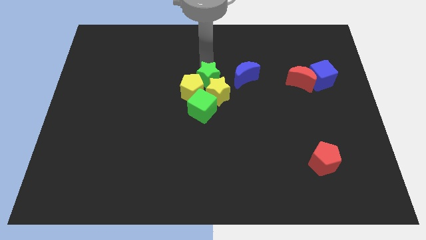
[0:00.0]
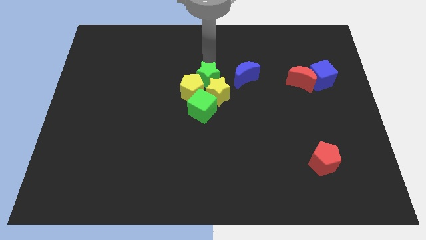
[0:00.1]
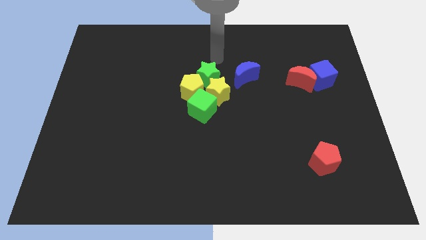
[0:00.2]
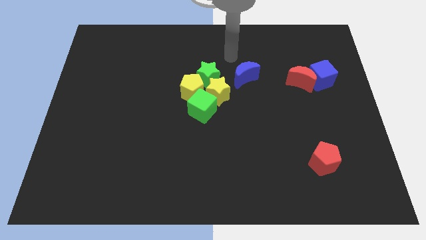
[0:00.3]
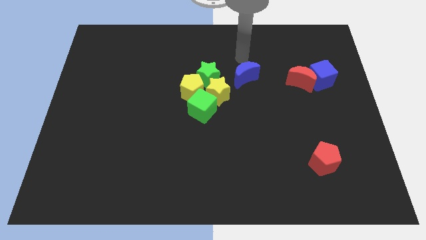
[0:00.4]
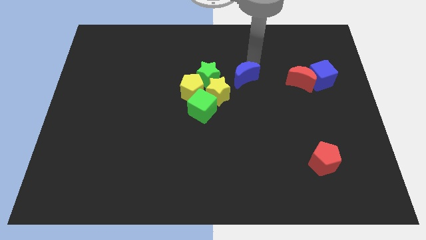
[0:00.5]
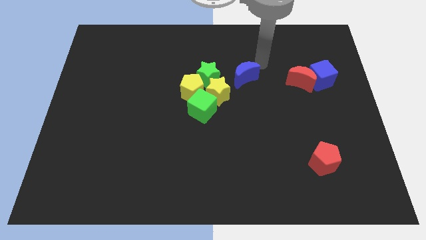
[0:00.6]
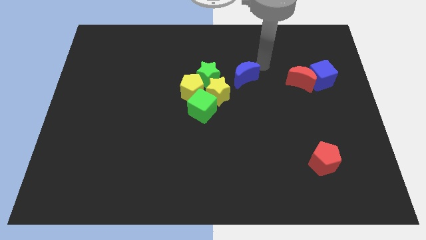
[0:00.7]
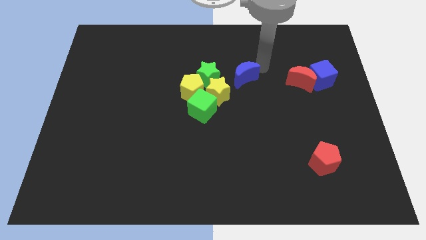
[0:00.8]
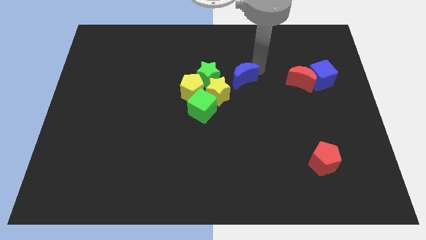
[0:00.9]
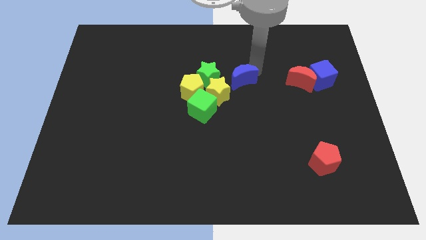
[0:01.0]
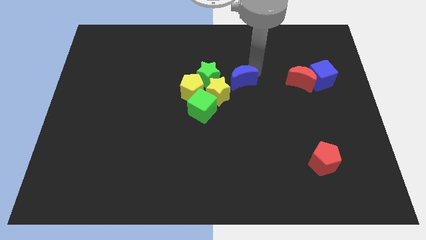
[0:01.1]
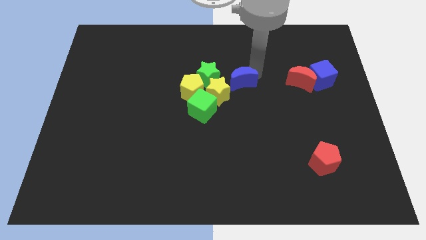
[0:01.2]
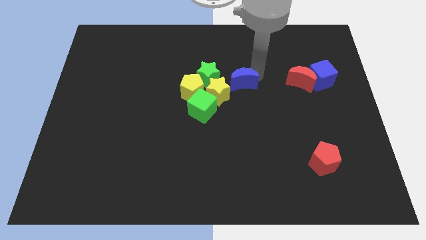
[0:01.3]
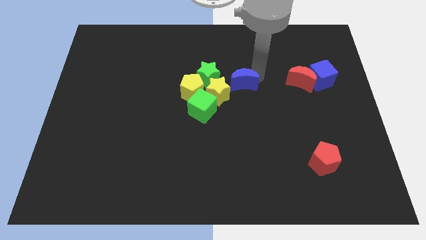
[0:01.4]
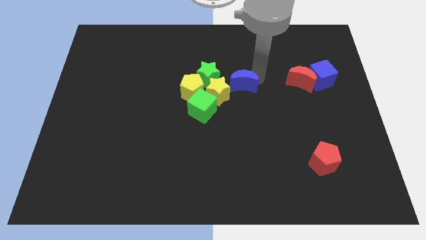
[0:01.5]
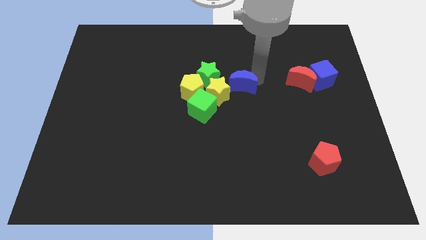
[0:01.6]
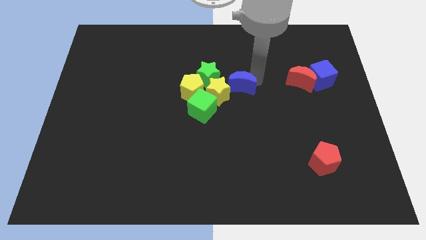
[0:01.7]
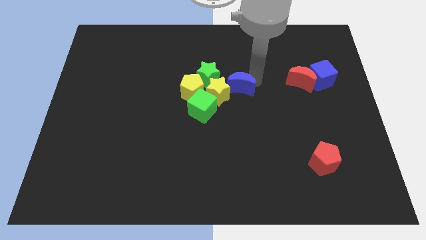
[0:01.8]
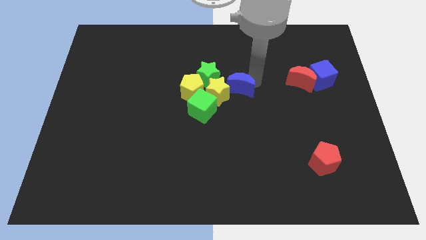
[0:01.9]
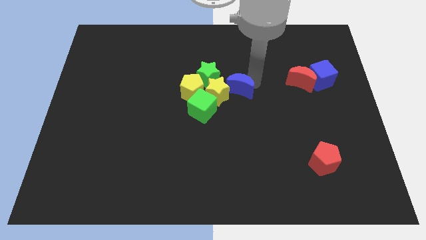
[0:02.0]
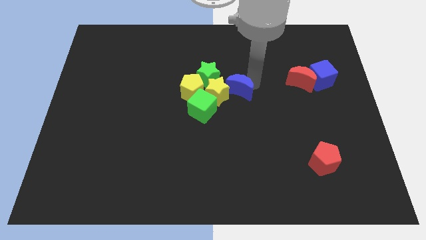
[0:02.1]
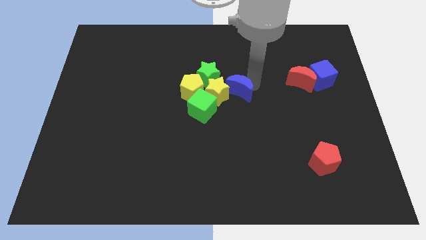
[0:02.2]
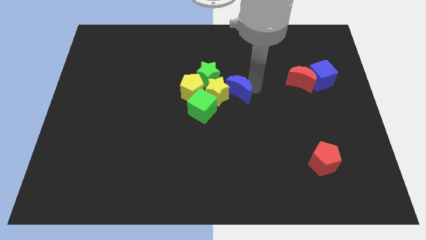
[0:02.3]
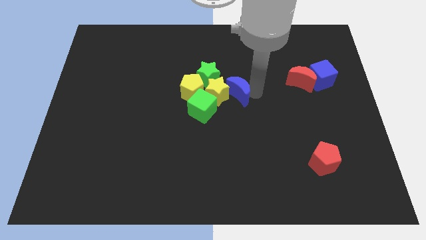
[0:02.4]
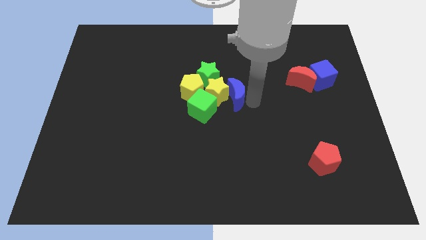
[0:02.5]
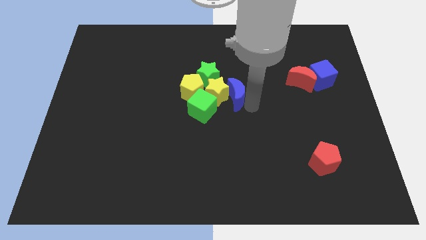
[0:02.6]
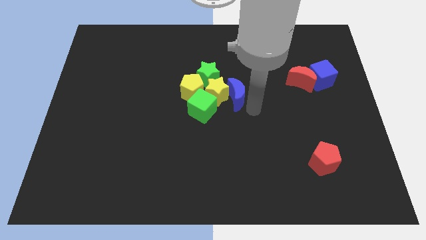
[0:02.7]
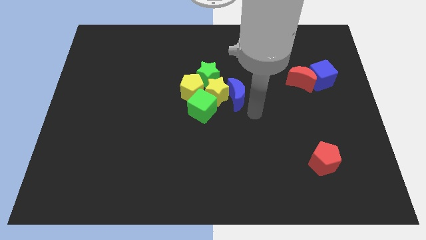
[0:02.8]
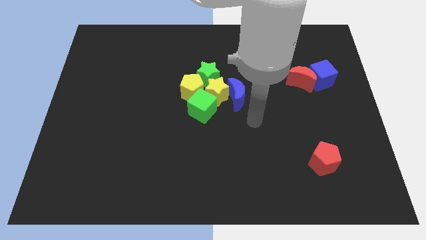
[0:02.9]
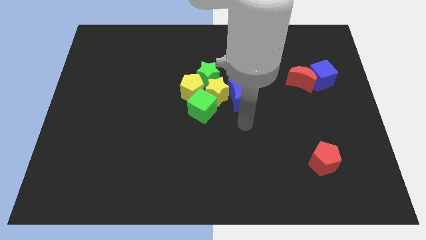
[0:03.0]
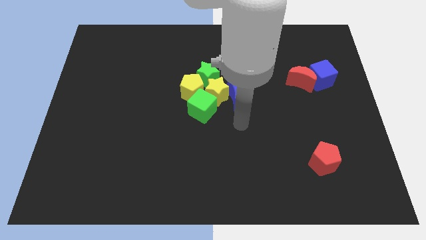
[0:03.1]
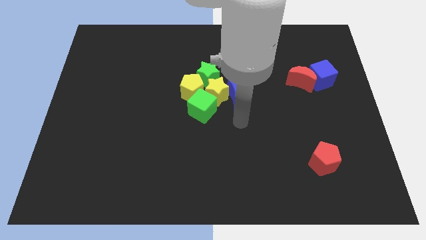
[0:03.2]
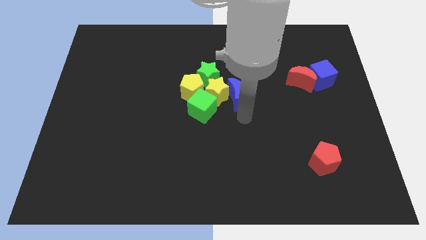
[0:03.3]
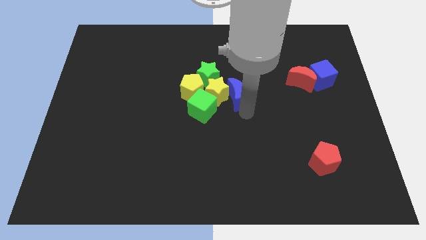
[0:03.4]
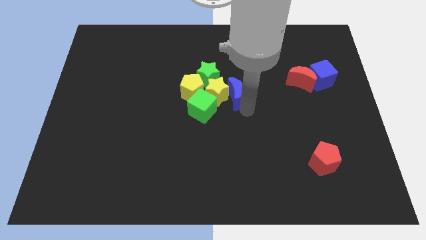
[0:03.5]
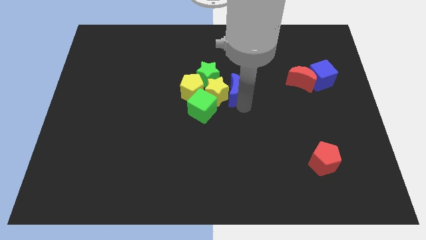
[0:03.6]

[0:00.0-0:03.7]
push blue moon into group of blocks

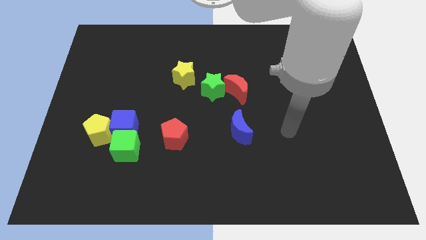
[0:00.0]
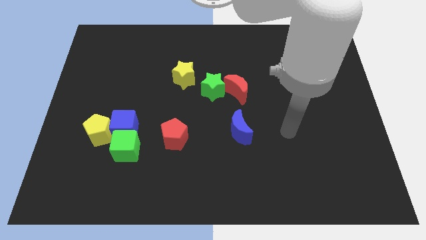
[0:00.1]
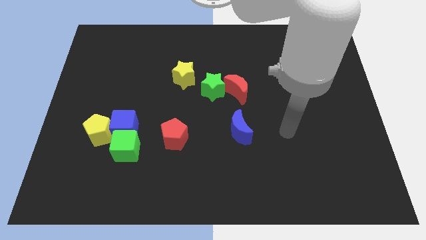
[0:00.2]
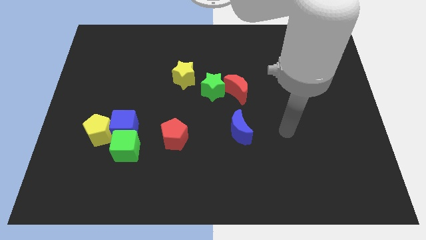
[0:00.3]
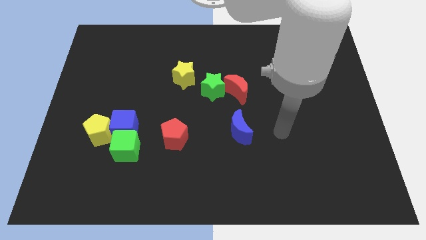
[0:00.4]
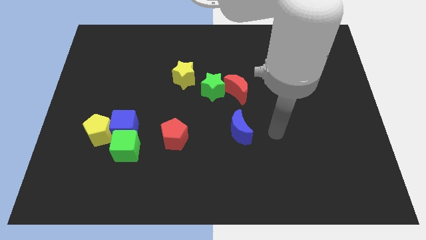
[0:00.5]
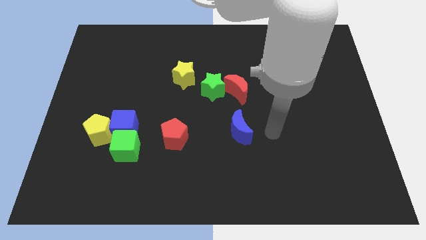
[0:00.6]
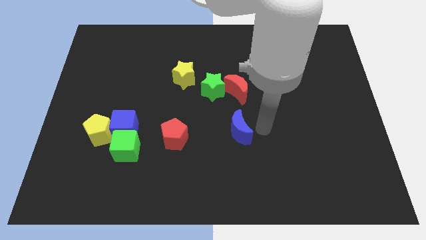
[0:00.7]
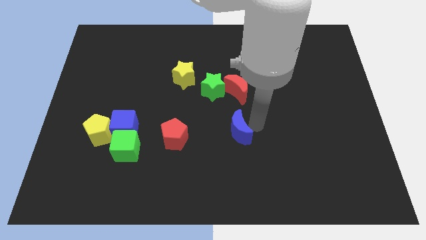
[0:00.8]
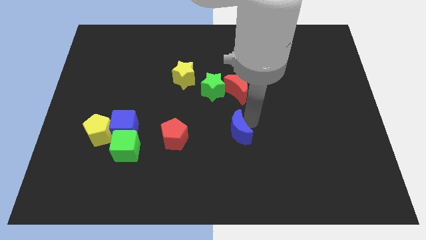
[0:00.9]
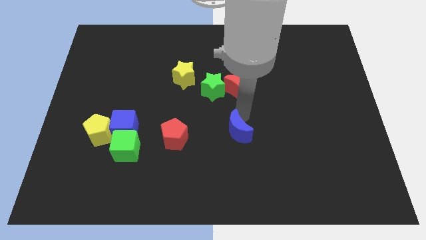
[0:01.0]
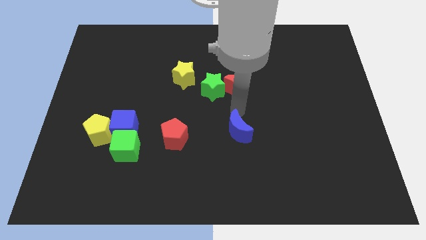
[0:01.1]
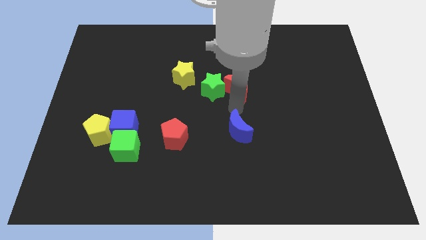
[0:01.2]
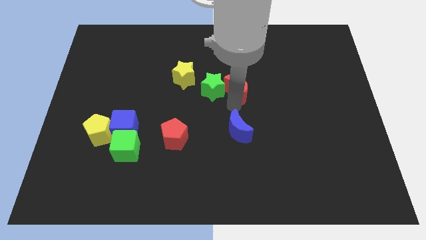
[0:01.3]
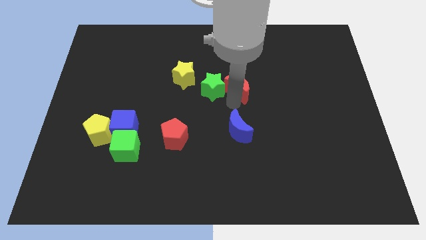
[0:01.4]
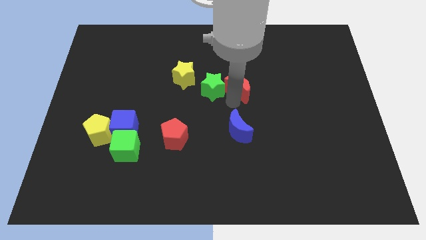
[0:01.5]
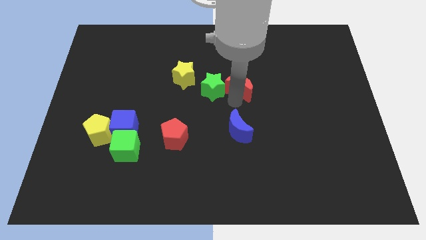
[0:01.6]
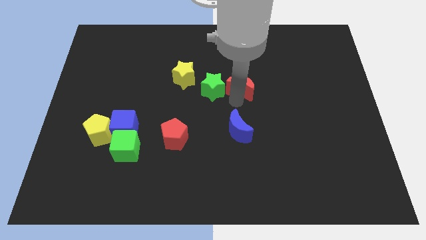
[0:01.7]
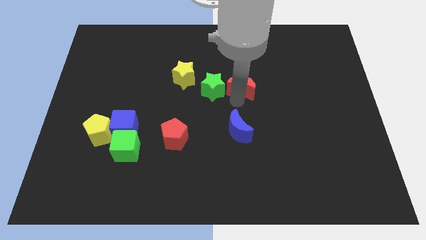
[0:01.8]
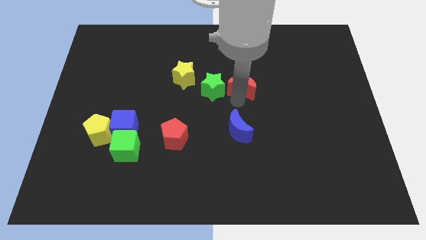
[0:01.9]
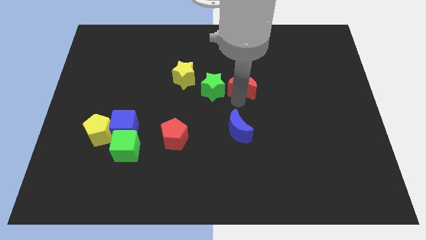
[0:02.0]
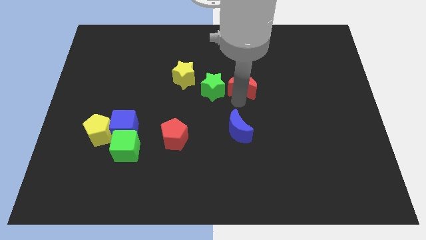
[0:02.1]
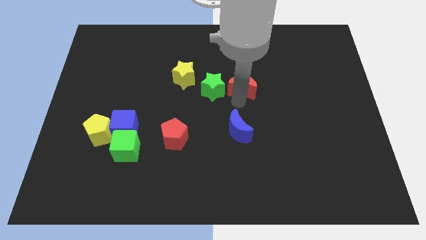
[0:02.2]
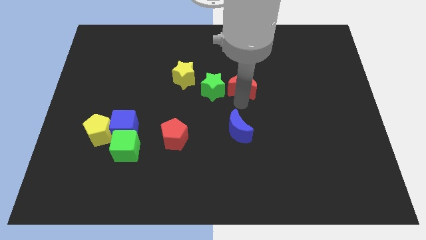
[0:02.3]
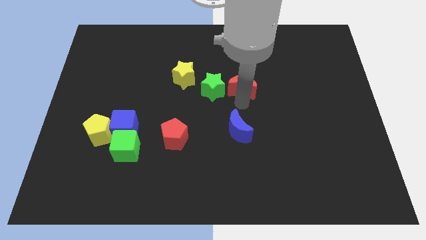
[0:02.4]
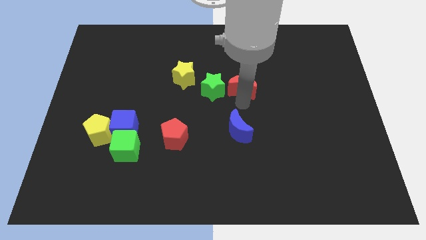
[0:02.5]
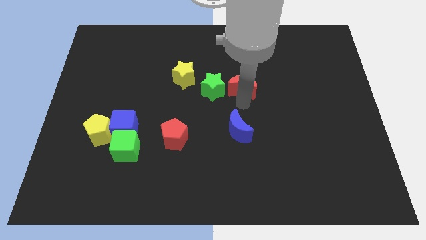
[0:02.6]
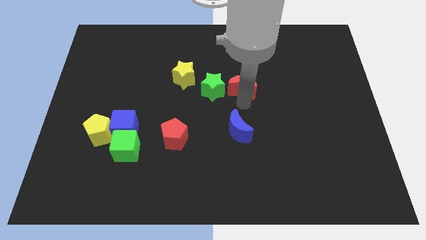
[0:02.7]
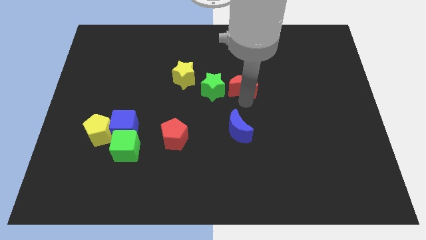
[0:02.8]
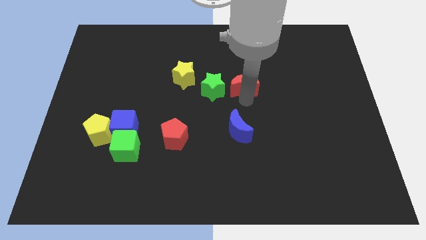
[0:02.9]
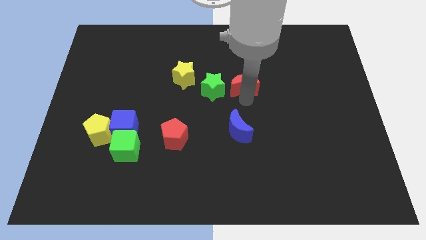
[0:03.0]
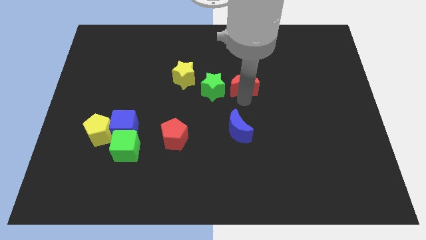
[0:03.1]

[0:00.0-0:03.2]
separate red moon and the green star

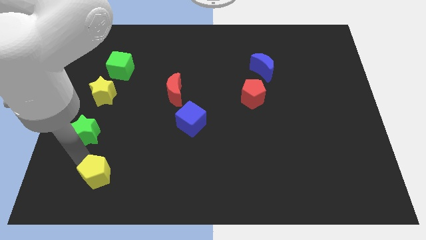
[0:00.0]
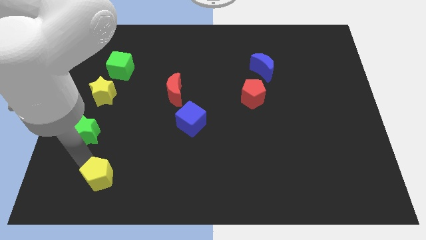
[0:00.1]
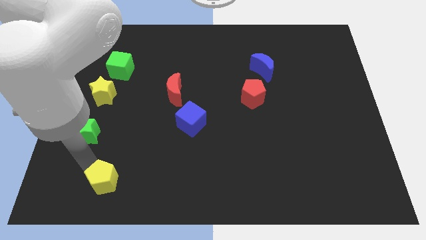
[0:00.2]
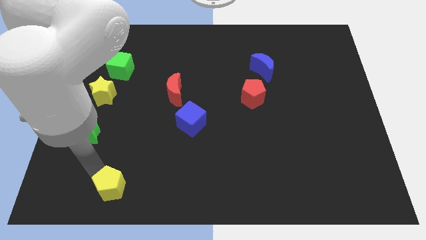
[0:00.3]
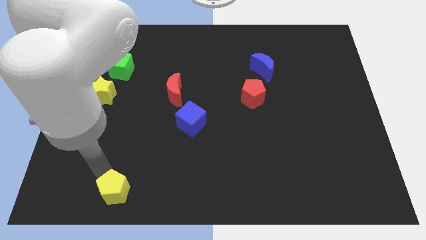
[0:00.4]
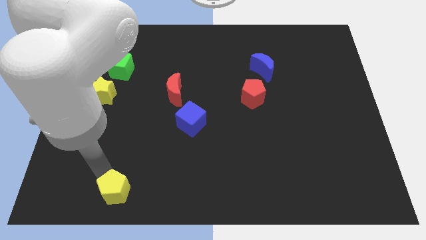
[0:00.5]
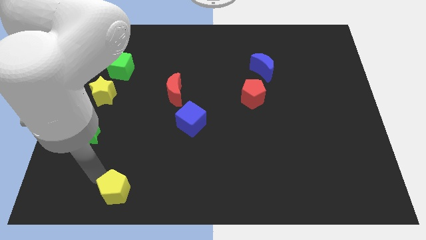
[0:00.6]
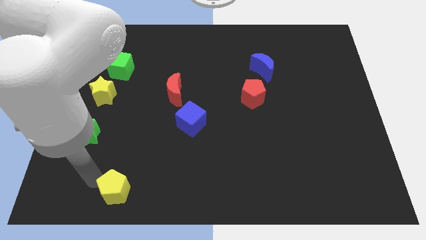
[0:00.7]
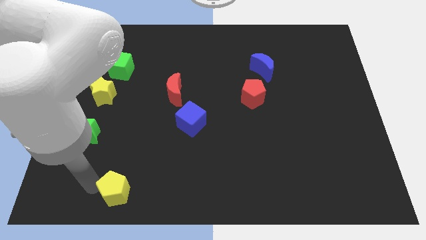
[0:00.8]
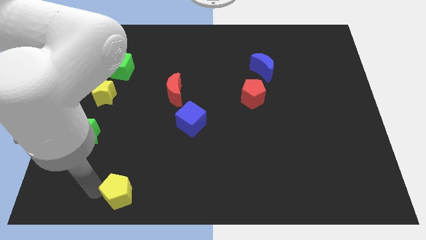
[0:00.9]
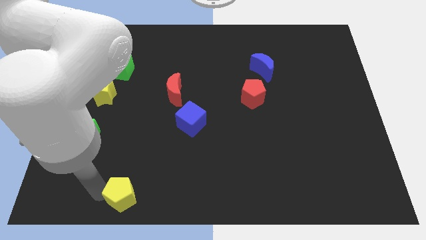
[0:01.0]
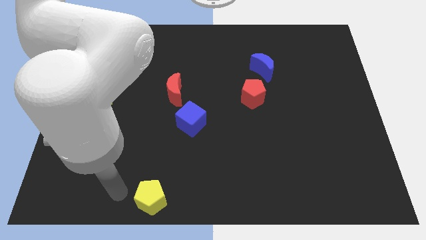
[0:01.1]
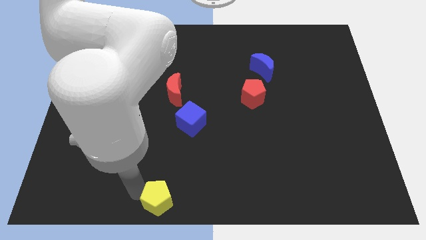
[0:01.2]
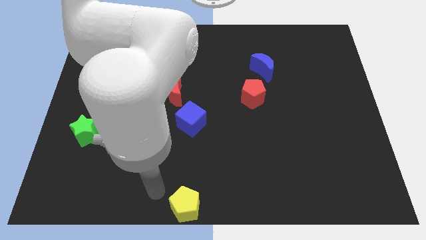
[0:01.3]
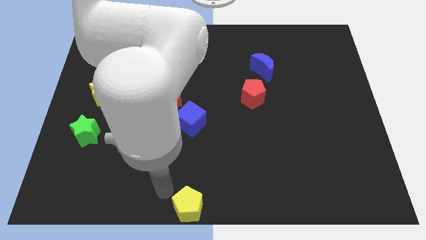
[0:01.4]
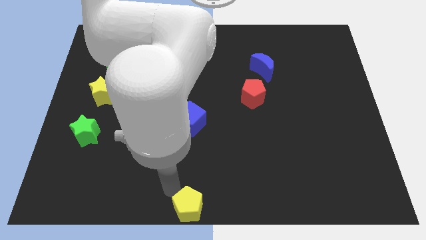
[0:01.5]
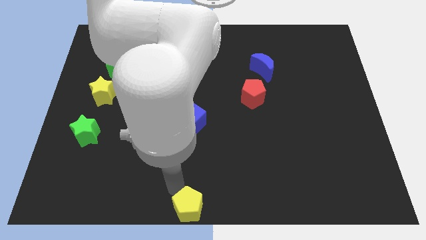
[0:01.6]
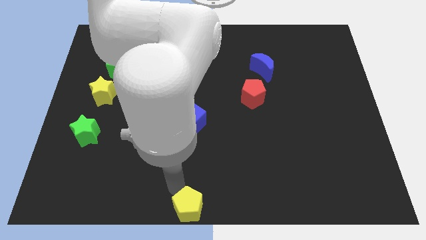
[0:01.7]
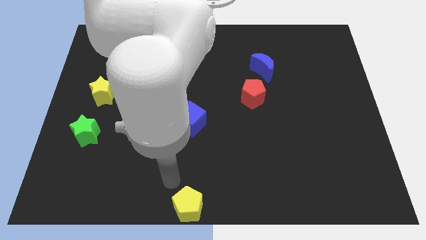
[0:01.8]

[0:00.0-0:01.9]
move the yellow pentagon diagonally bottom right to the yellow star

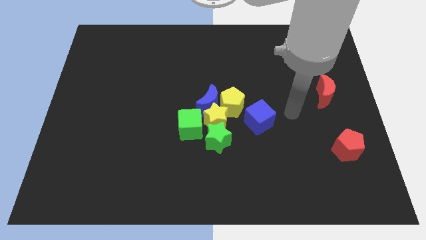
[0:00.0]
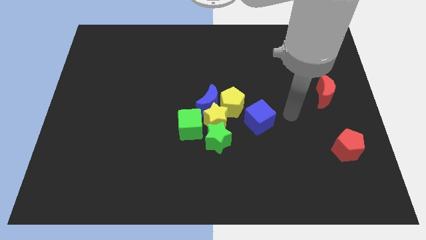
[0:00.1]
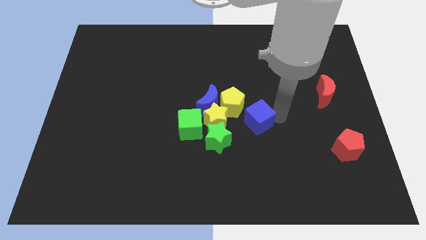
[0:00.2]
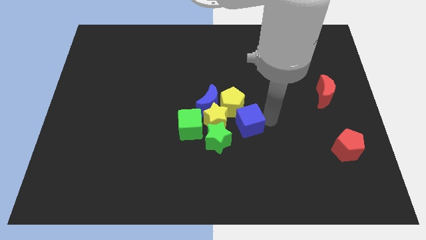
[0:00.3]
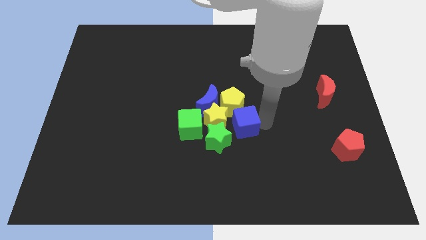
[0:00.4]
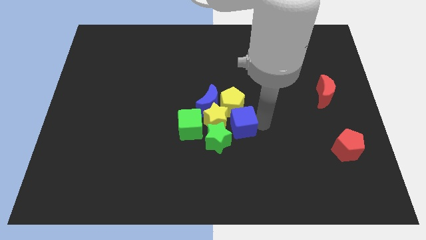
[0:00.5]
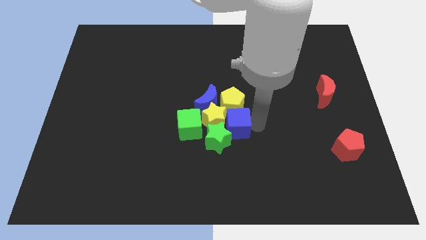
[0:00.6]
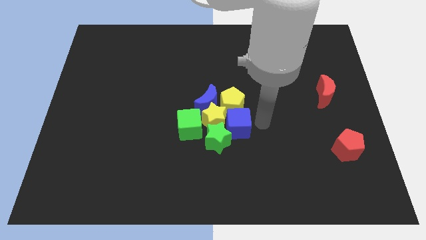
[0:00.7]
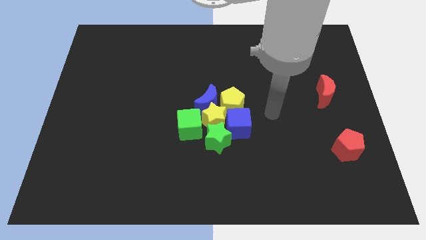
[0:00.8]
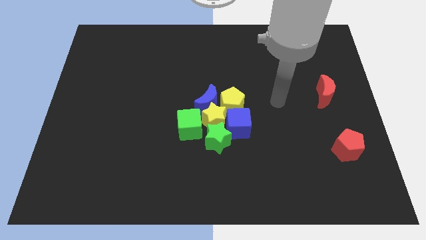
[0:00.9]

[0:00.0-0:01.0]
push the blue cube below the yellow pentagon
